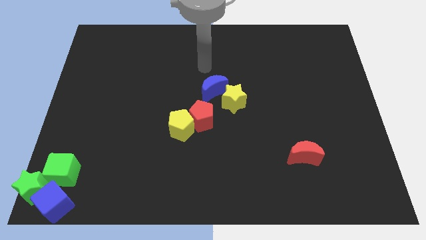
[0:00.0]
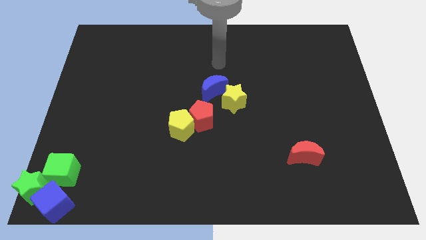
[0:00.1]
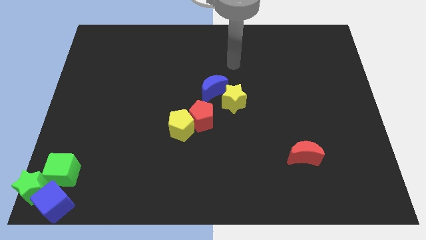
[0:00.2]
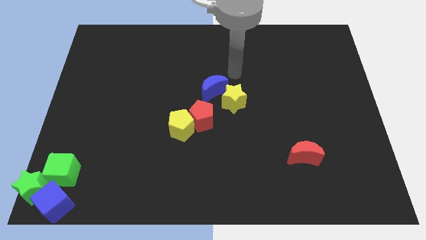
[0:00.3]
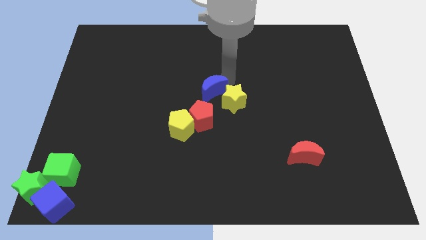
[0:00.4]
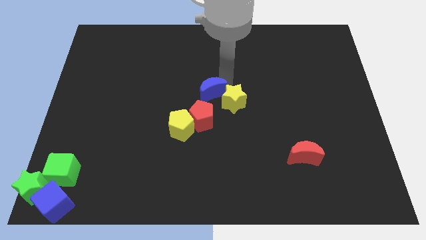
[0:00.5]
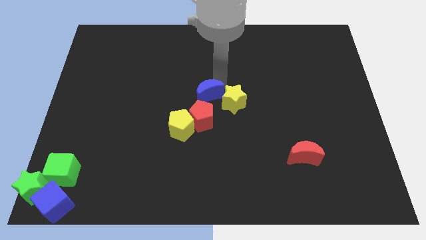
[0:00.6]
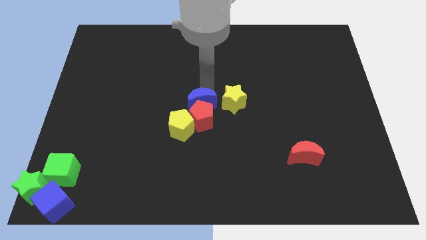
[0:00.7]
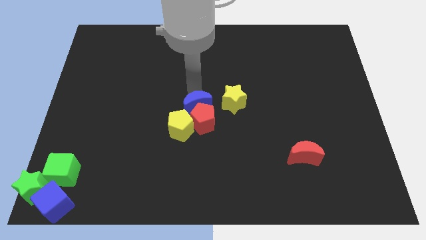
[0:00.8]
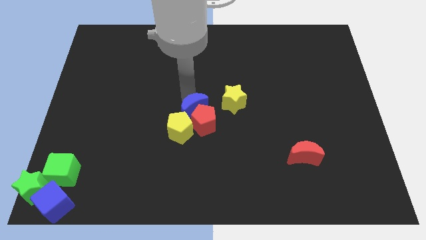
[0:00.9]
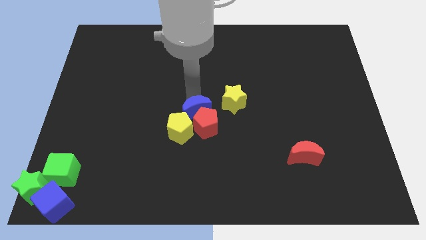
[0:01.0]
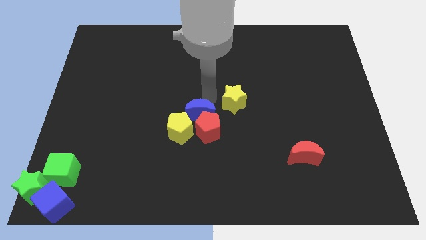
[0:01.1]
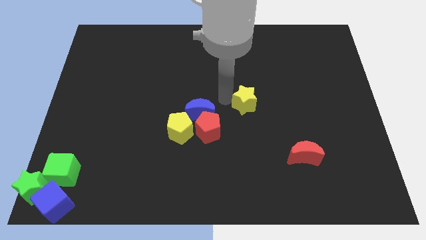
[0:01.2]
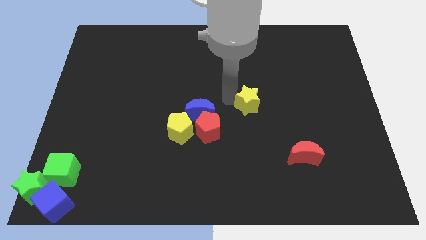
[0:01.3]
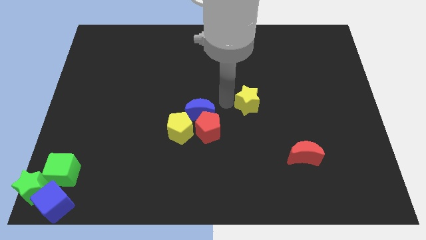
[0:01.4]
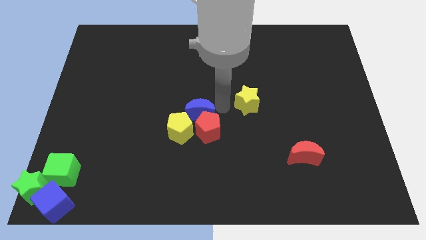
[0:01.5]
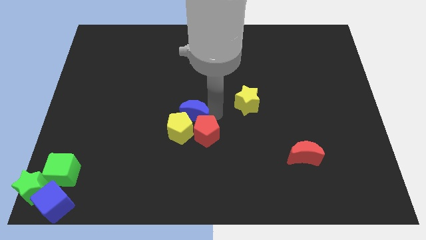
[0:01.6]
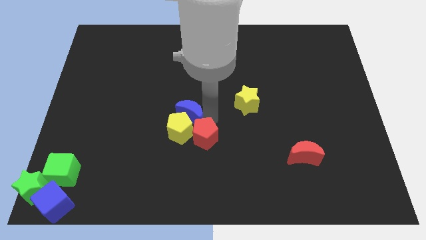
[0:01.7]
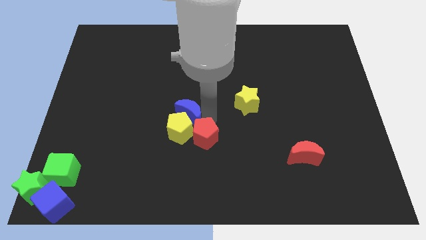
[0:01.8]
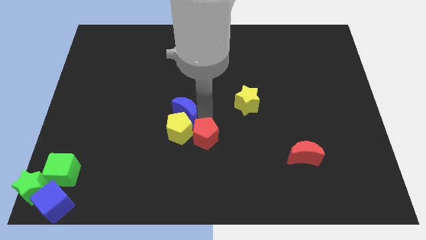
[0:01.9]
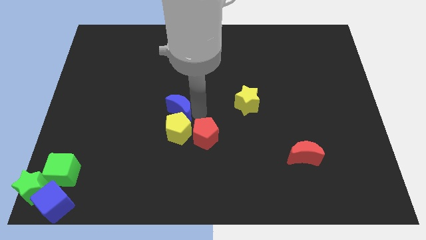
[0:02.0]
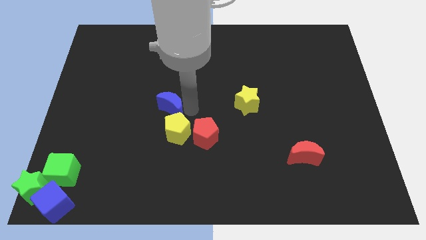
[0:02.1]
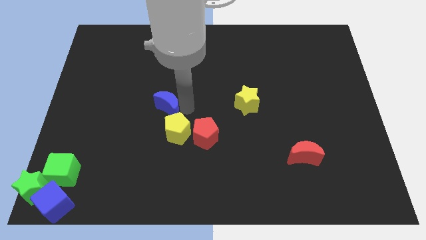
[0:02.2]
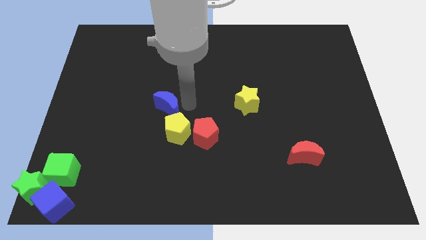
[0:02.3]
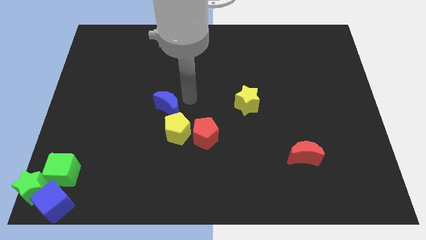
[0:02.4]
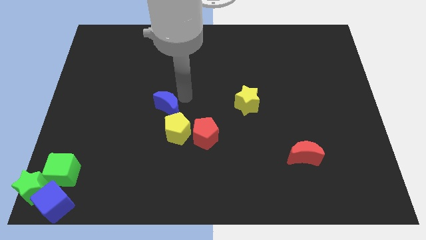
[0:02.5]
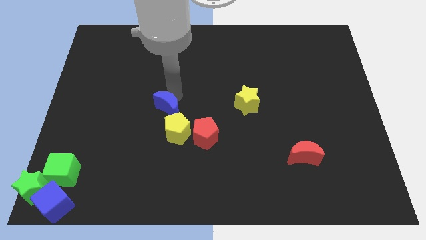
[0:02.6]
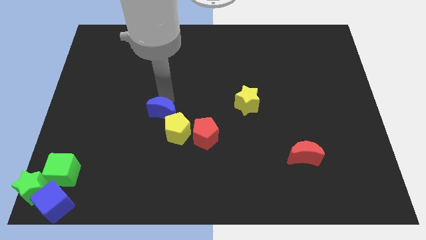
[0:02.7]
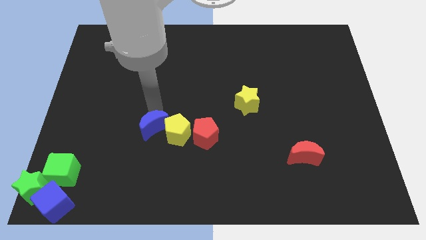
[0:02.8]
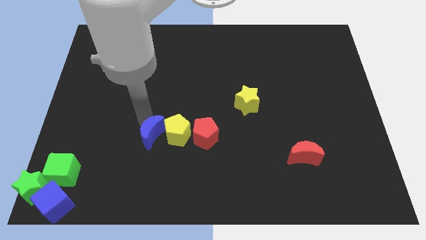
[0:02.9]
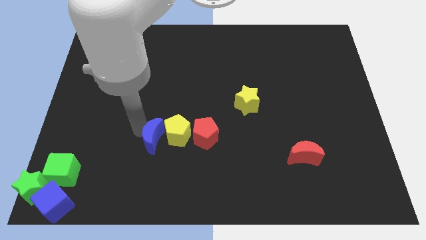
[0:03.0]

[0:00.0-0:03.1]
place the blue crescent to the left of yellow pentagon

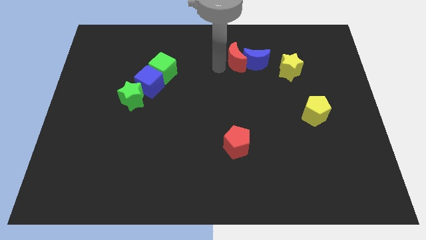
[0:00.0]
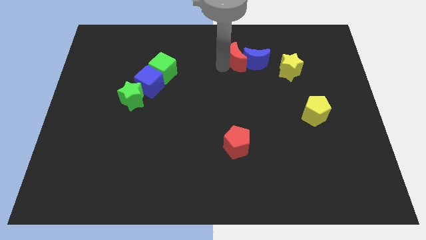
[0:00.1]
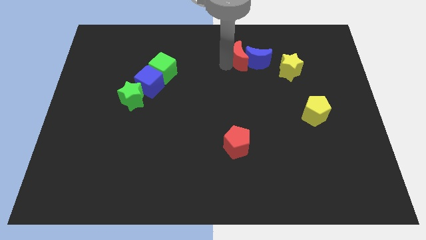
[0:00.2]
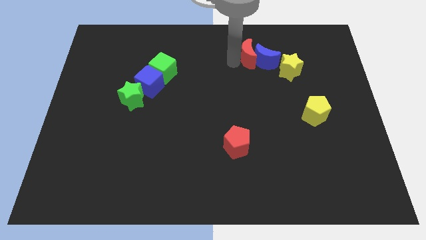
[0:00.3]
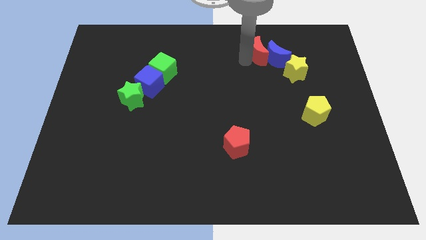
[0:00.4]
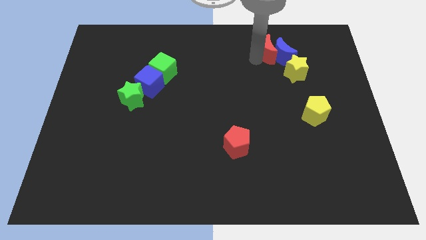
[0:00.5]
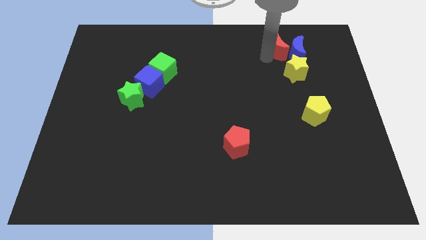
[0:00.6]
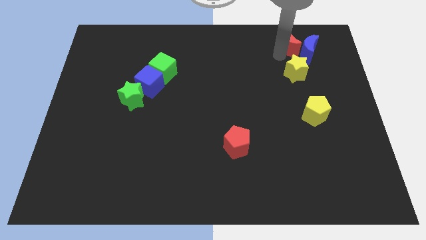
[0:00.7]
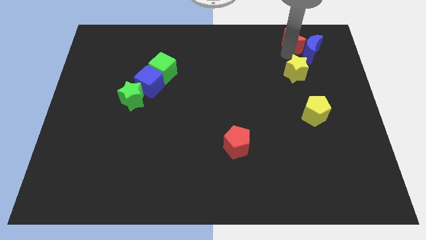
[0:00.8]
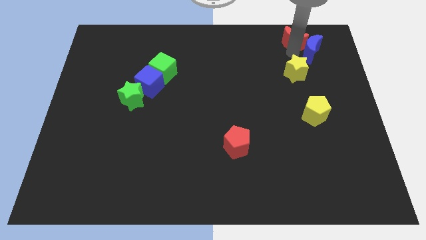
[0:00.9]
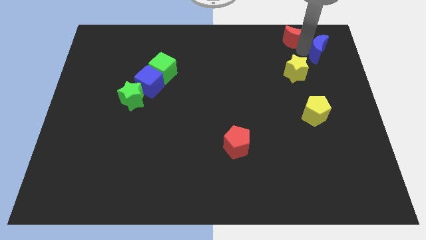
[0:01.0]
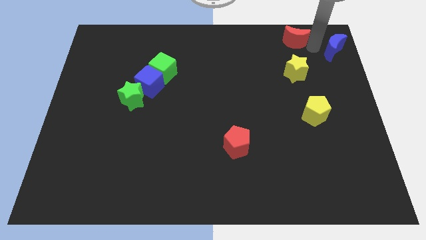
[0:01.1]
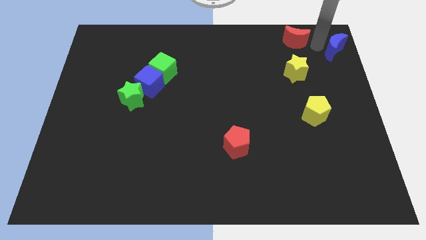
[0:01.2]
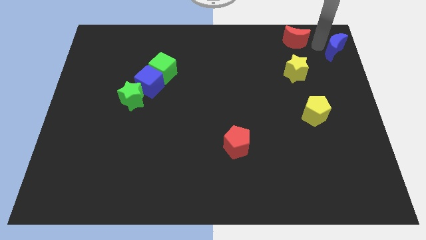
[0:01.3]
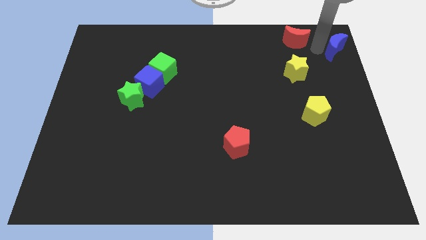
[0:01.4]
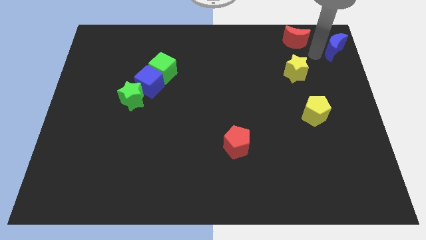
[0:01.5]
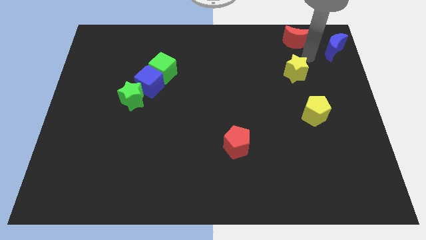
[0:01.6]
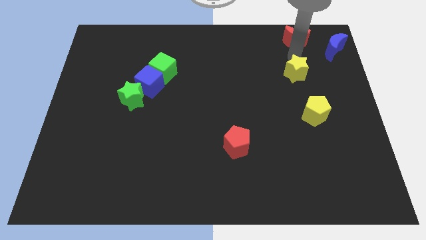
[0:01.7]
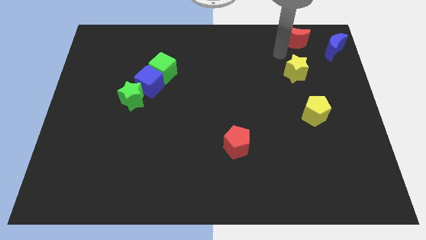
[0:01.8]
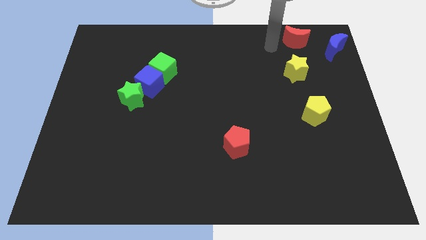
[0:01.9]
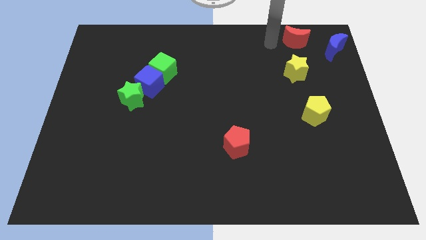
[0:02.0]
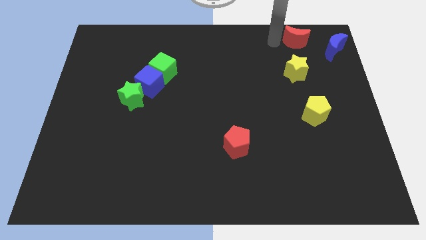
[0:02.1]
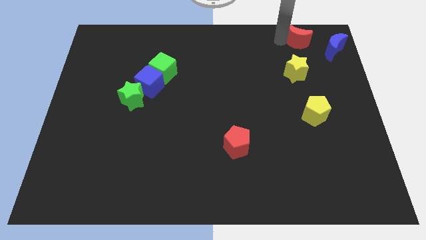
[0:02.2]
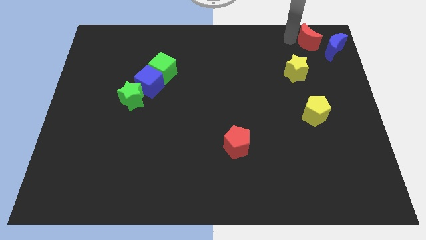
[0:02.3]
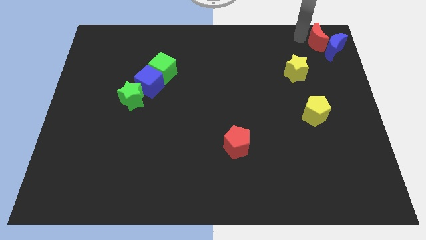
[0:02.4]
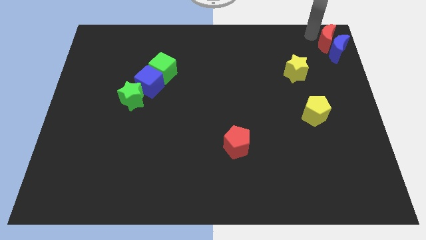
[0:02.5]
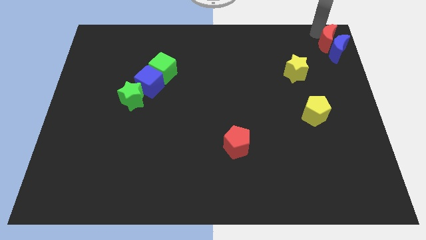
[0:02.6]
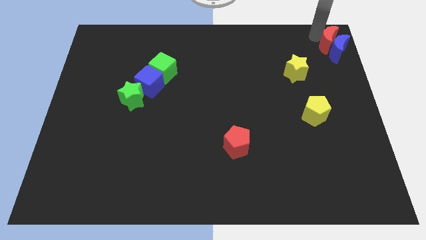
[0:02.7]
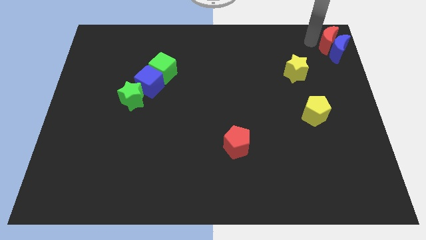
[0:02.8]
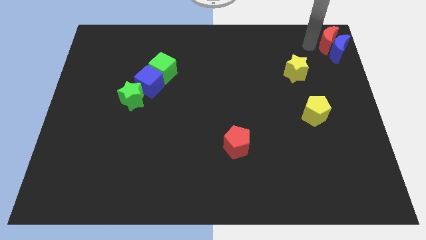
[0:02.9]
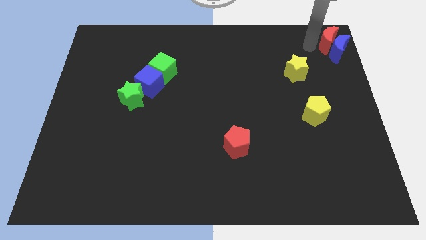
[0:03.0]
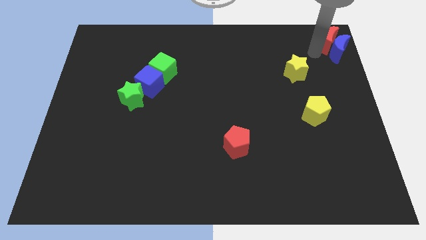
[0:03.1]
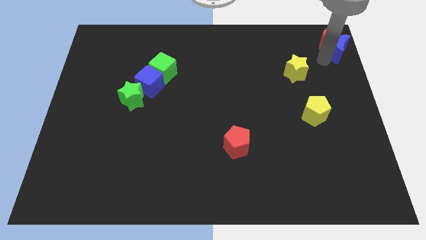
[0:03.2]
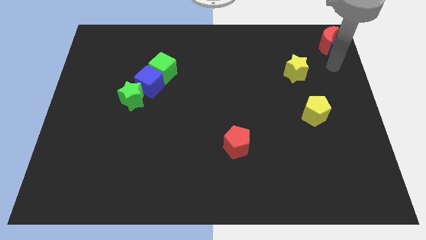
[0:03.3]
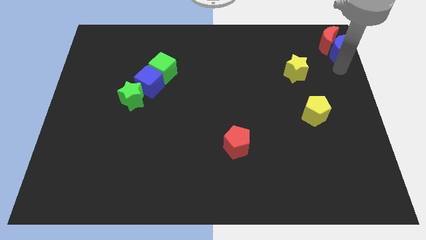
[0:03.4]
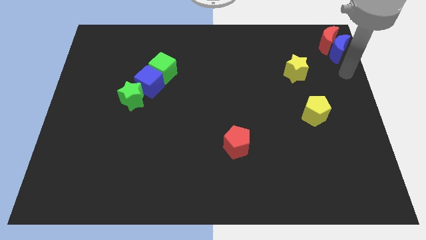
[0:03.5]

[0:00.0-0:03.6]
push the red moon and blue moon at the top right side of the yellow star

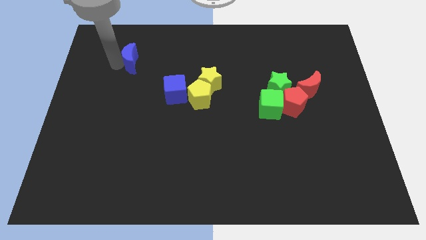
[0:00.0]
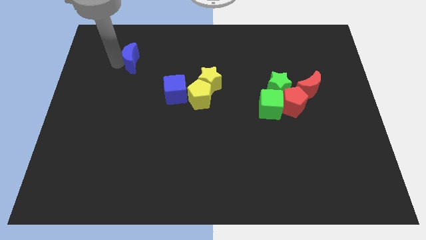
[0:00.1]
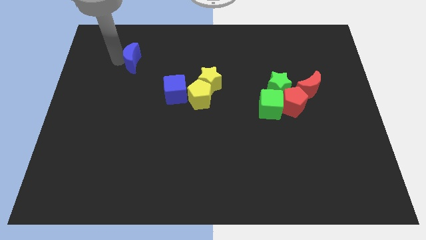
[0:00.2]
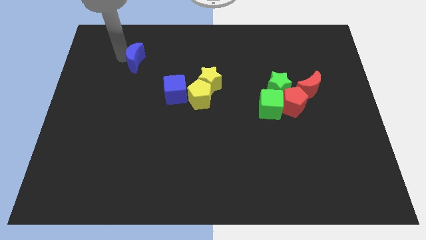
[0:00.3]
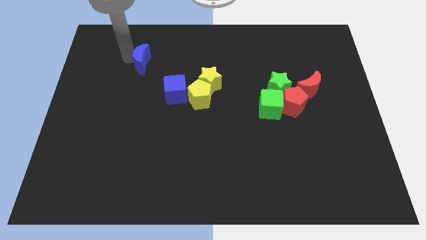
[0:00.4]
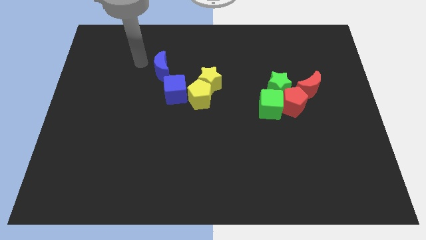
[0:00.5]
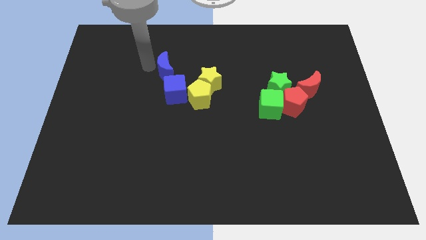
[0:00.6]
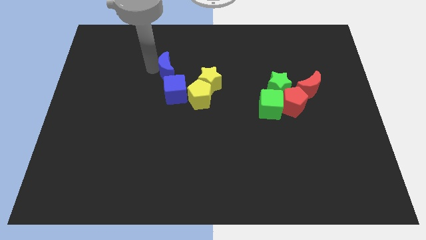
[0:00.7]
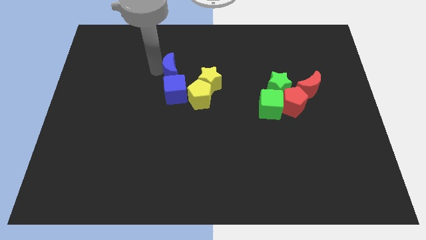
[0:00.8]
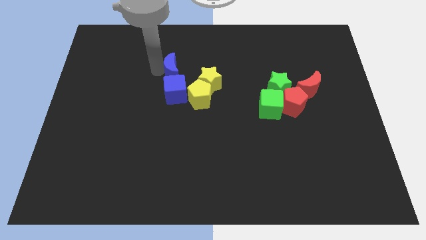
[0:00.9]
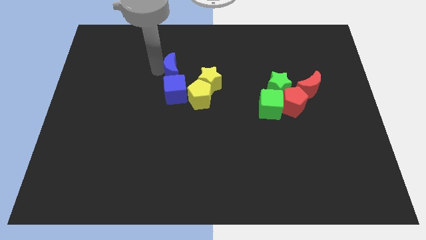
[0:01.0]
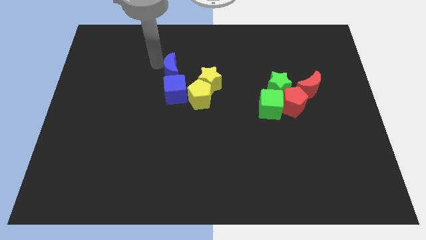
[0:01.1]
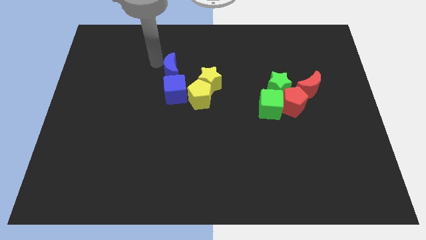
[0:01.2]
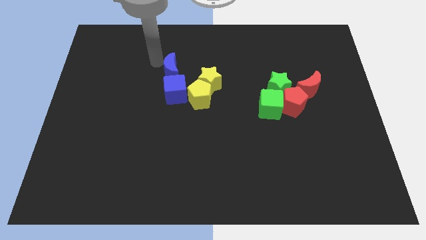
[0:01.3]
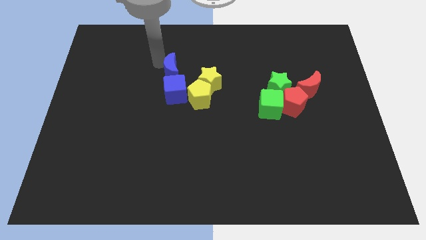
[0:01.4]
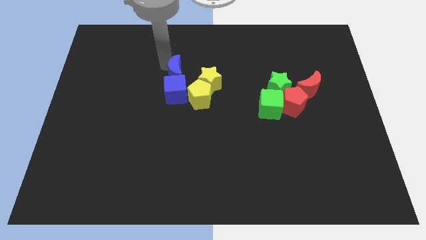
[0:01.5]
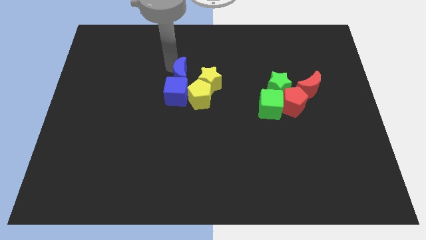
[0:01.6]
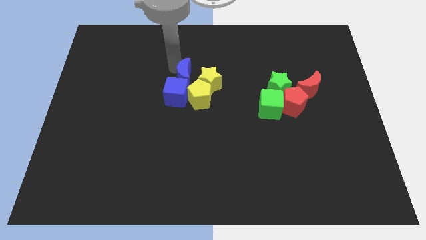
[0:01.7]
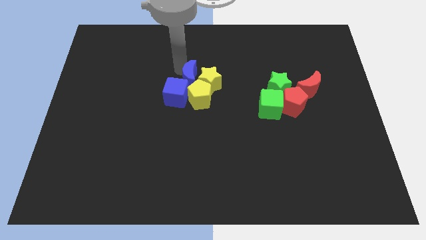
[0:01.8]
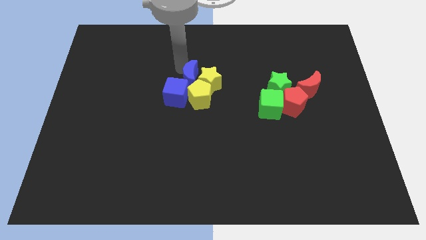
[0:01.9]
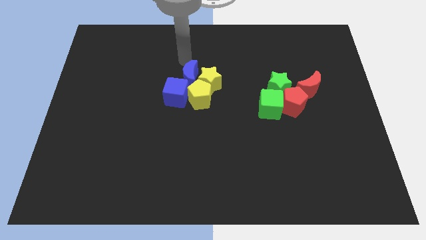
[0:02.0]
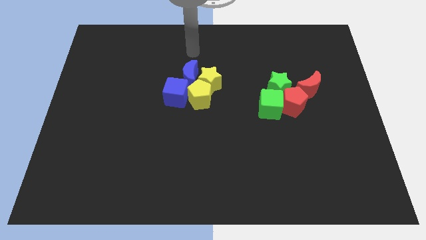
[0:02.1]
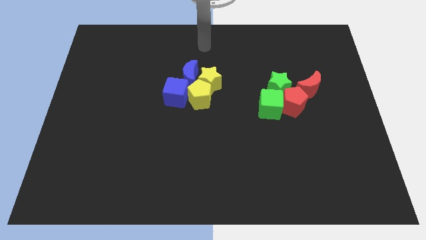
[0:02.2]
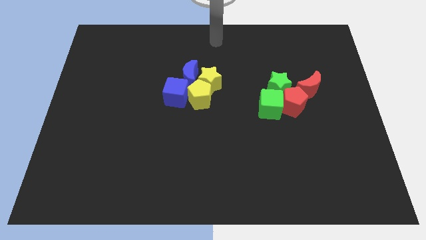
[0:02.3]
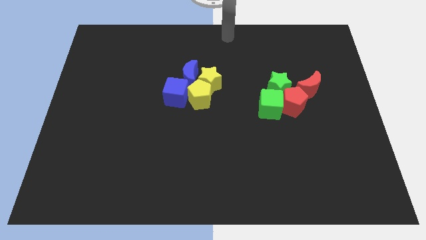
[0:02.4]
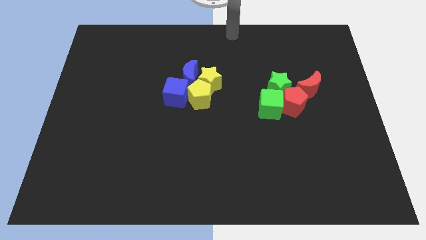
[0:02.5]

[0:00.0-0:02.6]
push the blue crescent left to the yellow star
